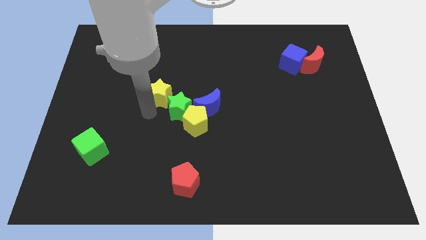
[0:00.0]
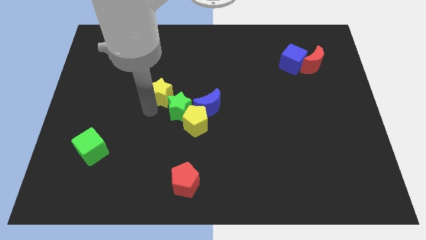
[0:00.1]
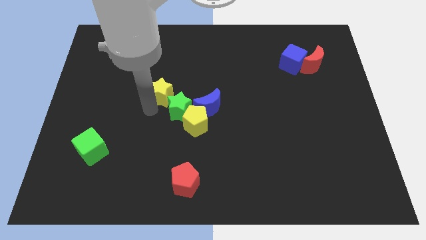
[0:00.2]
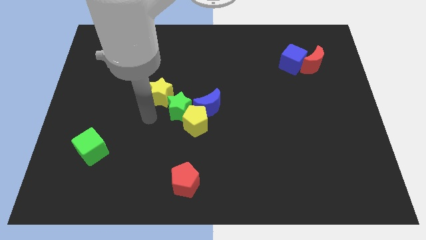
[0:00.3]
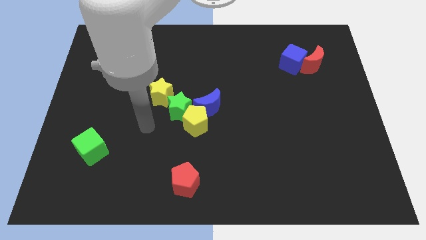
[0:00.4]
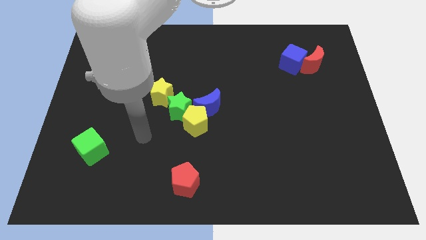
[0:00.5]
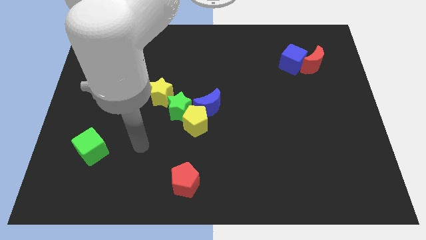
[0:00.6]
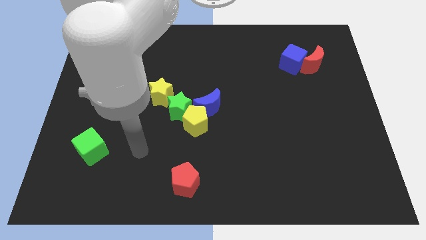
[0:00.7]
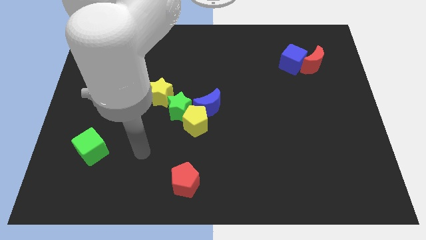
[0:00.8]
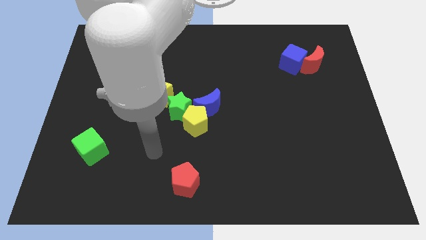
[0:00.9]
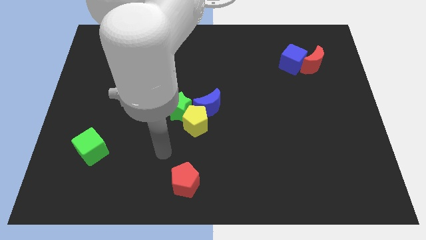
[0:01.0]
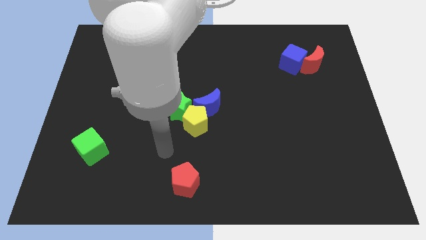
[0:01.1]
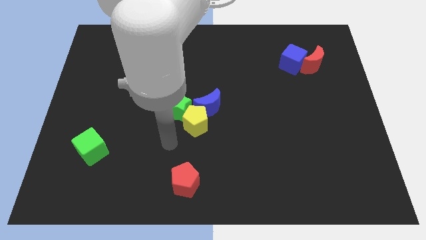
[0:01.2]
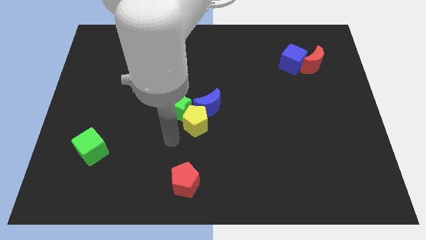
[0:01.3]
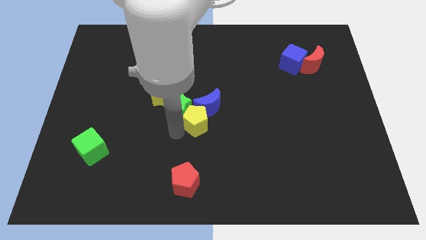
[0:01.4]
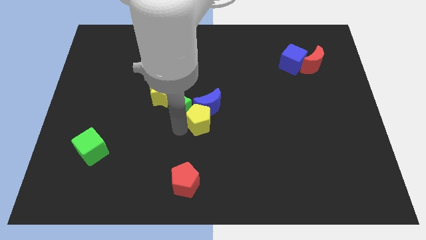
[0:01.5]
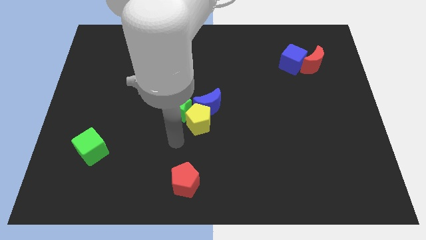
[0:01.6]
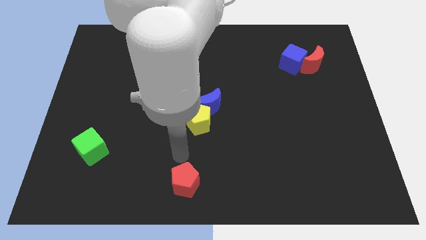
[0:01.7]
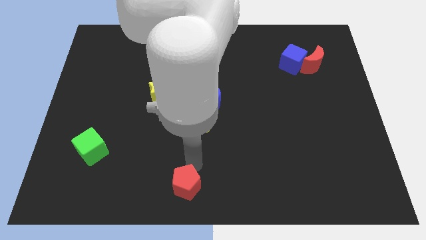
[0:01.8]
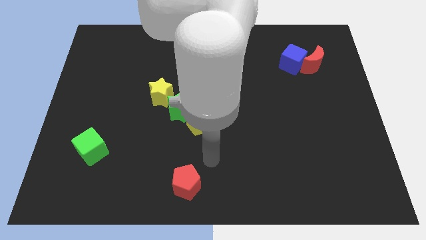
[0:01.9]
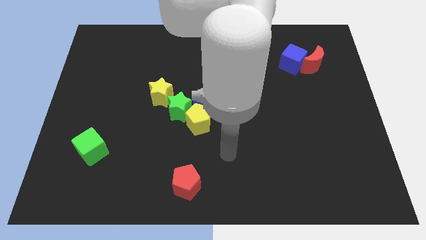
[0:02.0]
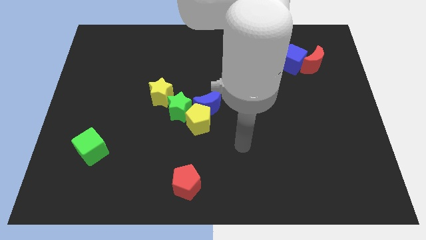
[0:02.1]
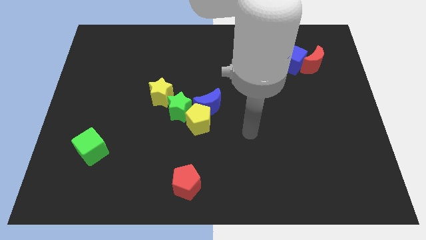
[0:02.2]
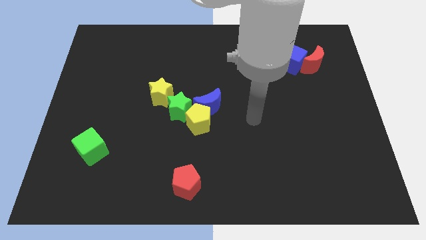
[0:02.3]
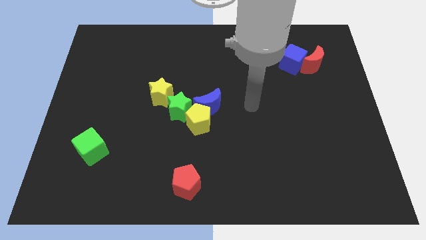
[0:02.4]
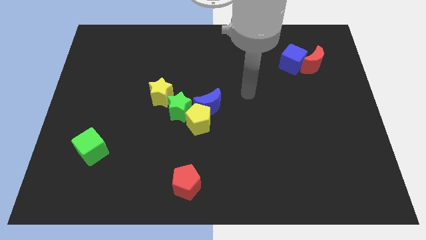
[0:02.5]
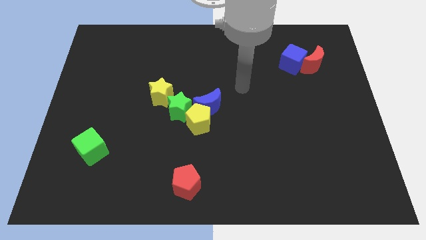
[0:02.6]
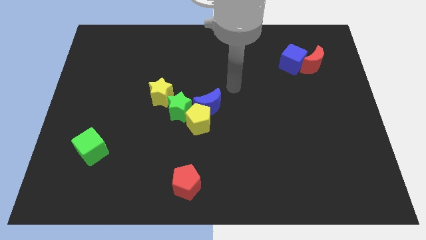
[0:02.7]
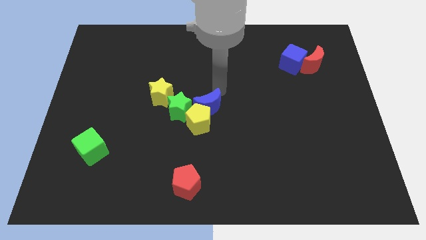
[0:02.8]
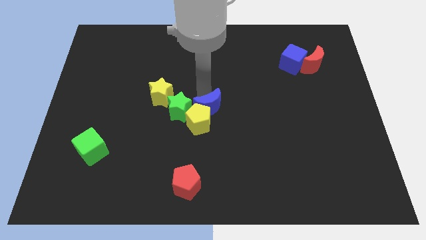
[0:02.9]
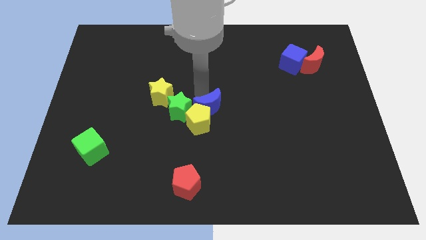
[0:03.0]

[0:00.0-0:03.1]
slightly touch the yellow pentagon

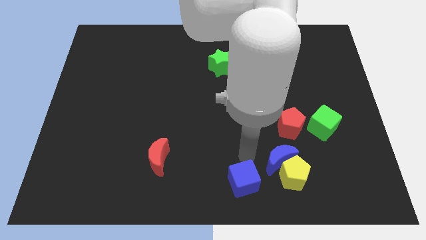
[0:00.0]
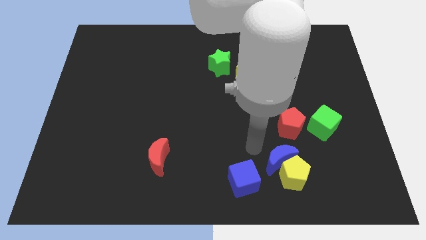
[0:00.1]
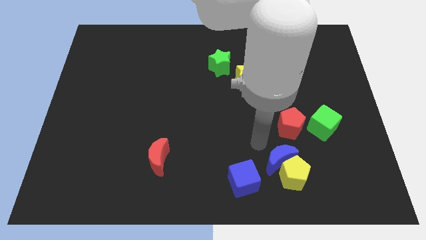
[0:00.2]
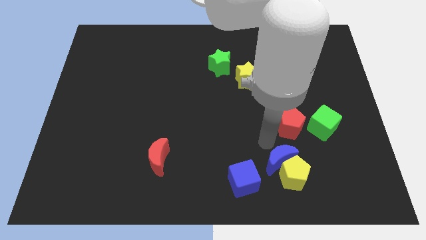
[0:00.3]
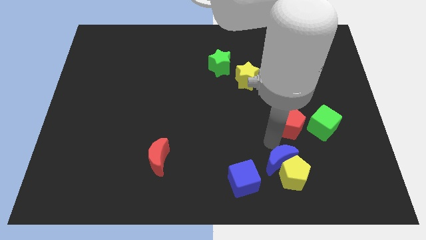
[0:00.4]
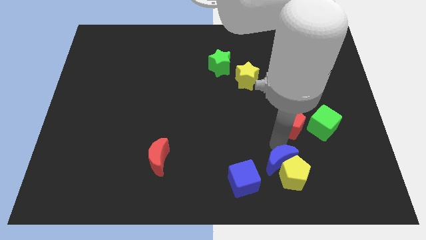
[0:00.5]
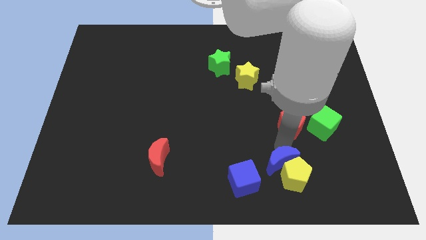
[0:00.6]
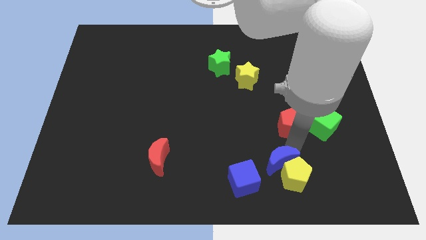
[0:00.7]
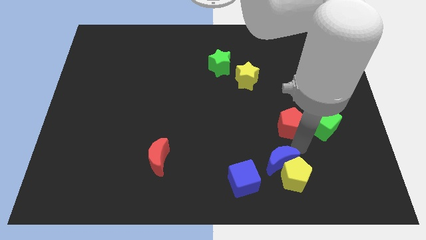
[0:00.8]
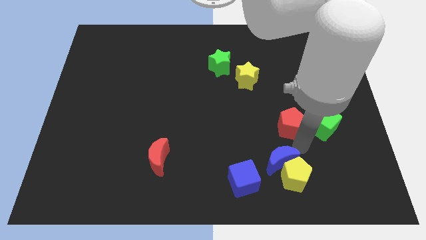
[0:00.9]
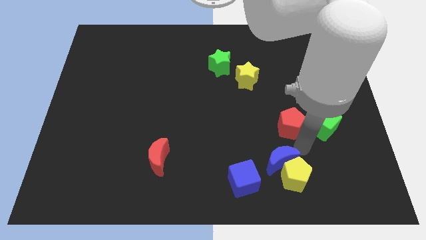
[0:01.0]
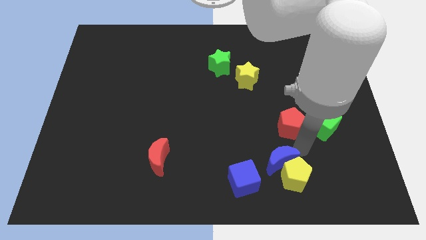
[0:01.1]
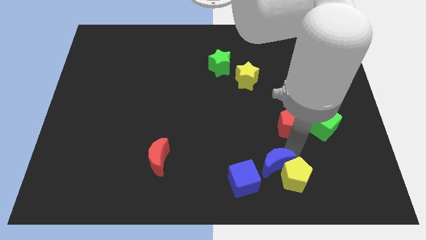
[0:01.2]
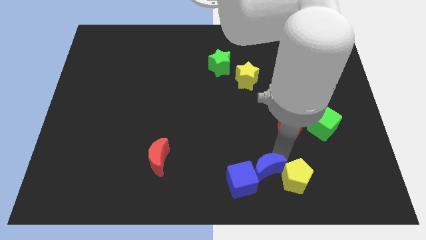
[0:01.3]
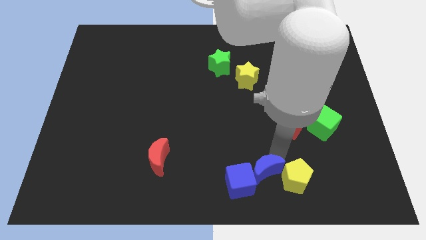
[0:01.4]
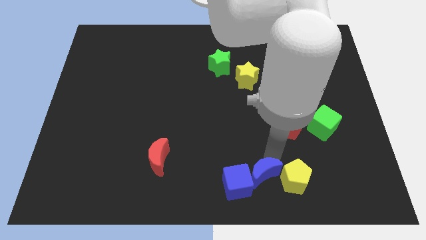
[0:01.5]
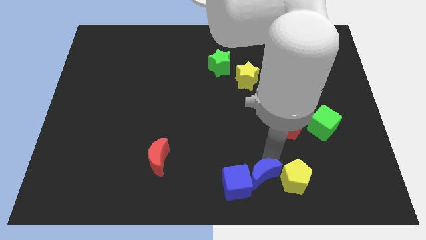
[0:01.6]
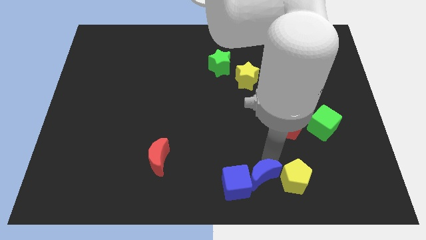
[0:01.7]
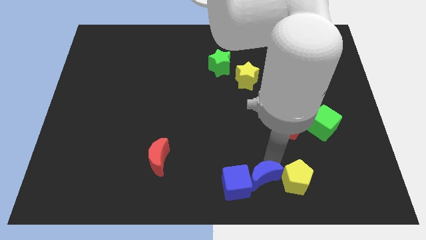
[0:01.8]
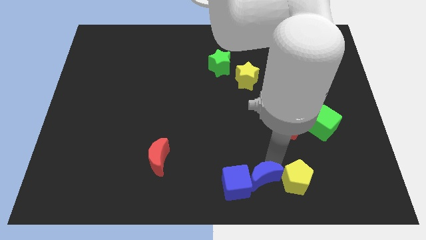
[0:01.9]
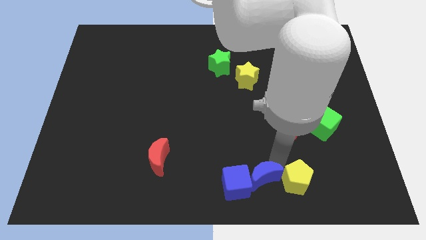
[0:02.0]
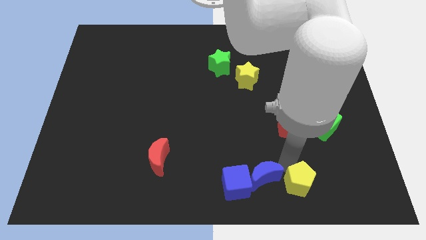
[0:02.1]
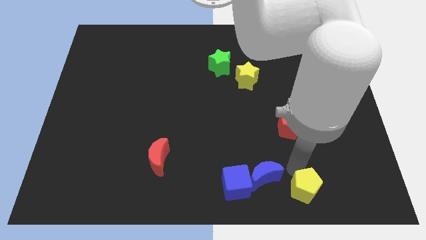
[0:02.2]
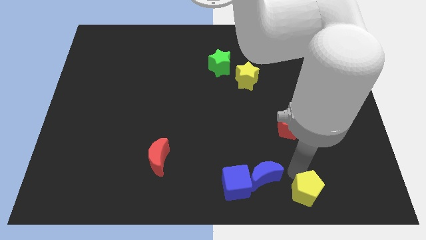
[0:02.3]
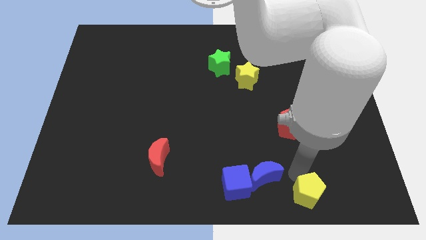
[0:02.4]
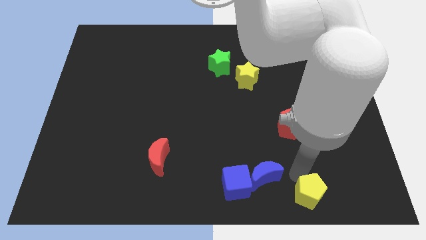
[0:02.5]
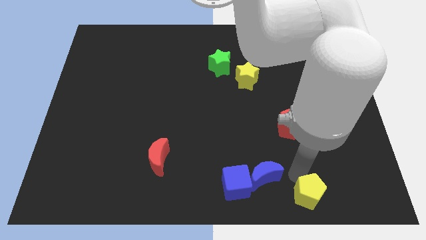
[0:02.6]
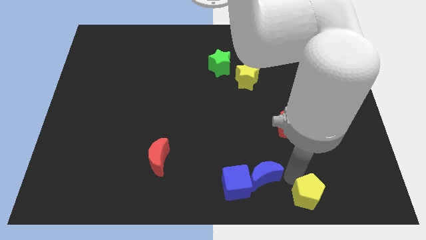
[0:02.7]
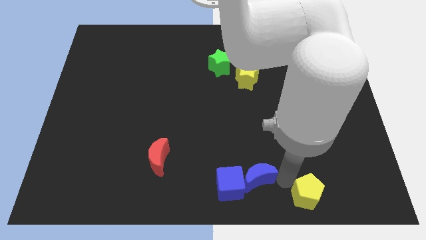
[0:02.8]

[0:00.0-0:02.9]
push the blue moon close to the blue cube

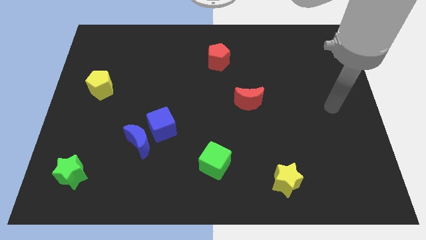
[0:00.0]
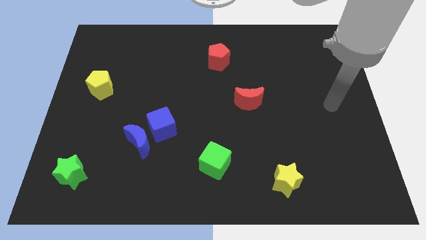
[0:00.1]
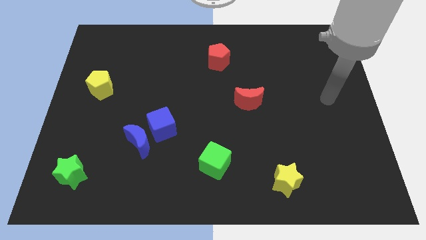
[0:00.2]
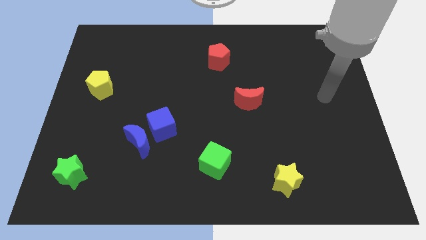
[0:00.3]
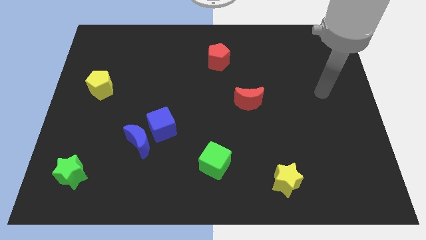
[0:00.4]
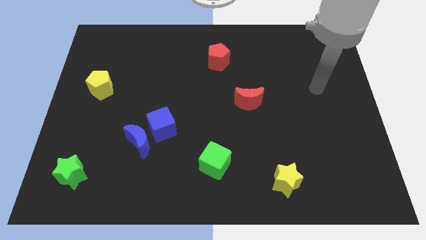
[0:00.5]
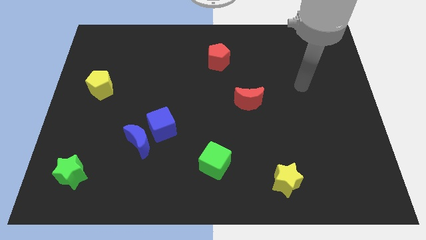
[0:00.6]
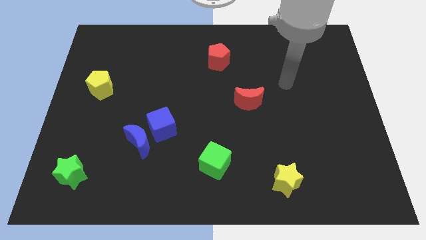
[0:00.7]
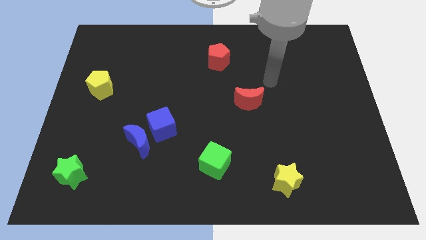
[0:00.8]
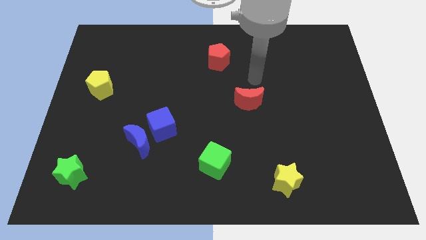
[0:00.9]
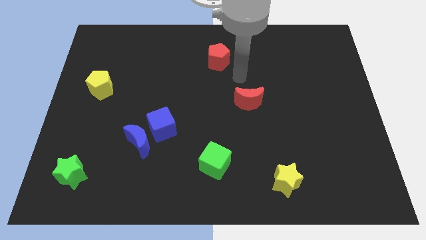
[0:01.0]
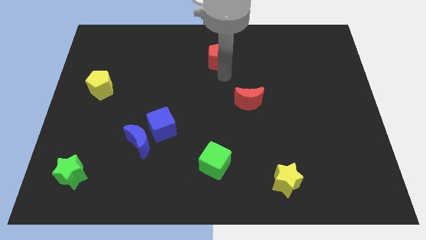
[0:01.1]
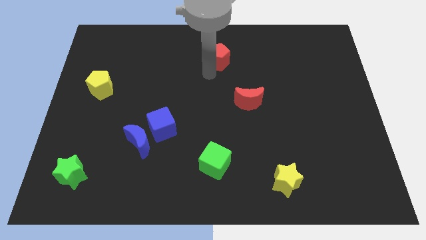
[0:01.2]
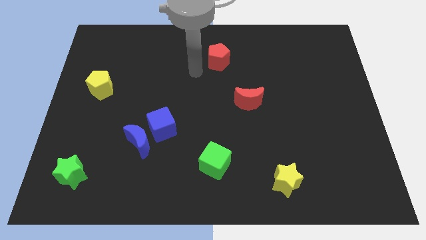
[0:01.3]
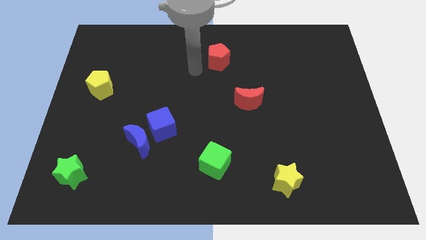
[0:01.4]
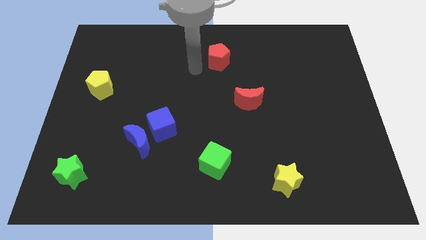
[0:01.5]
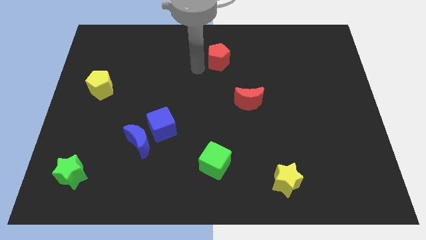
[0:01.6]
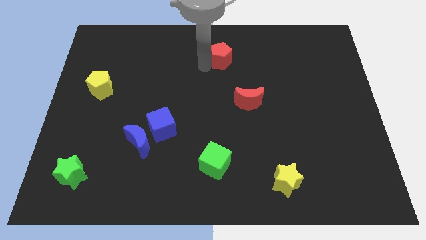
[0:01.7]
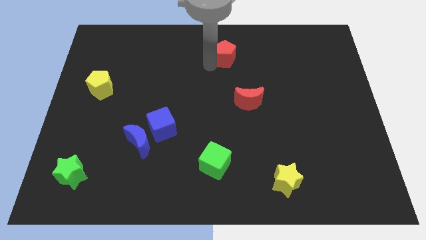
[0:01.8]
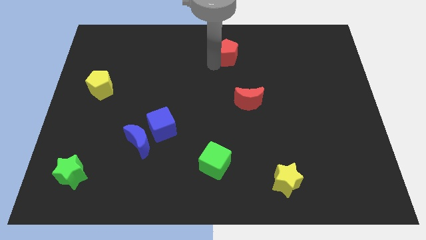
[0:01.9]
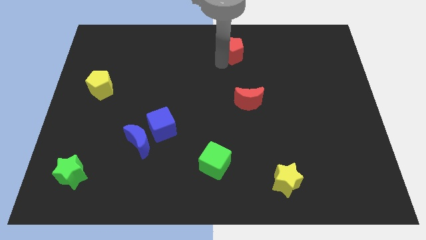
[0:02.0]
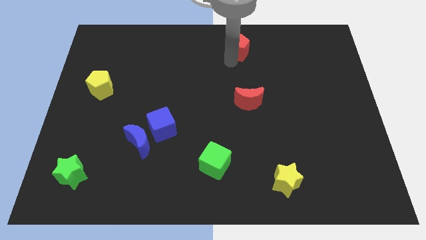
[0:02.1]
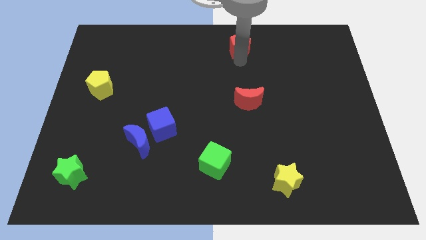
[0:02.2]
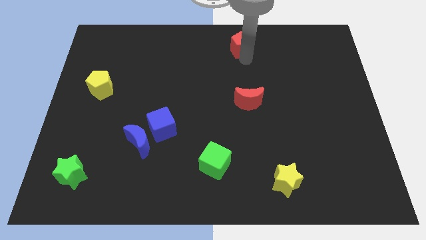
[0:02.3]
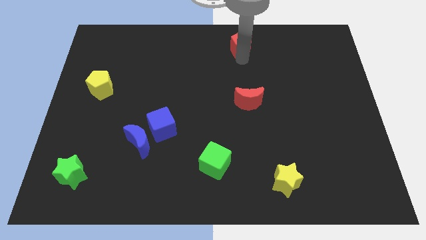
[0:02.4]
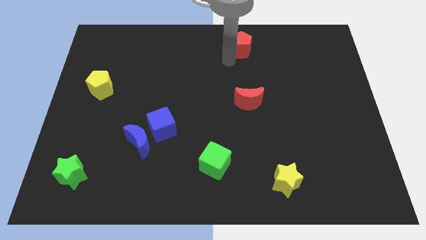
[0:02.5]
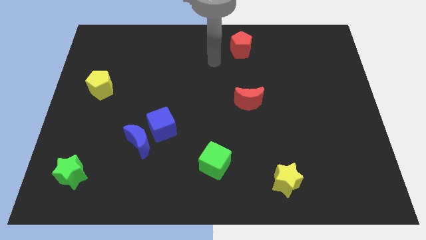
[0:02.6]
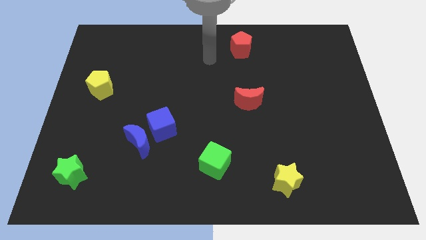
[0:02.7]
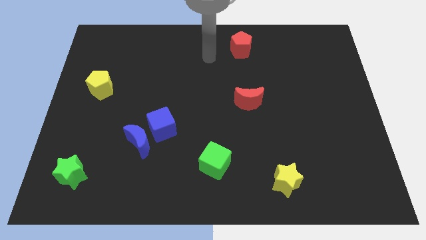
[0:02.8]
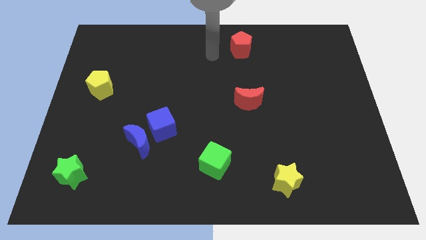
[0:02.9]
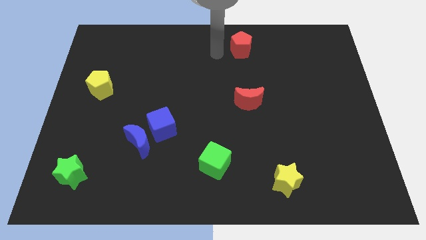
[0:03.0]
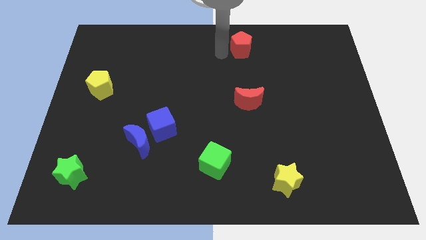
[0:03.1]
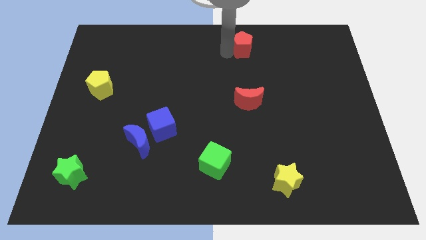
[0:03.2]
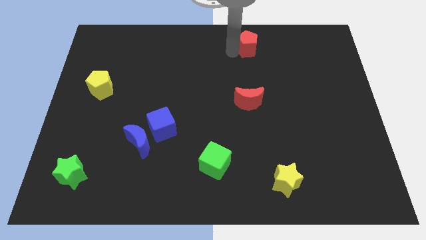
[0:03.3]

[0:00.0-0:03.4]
push the red pentagon to the top of the red crescent
